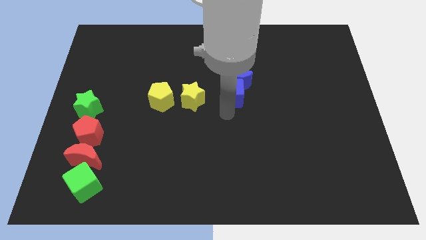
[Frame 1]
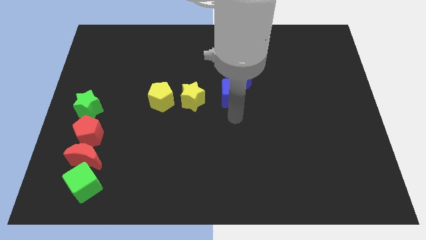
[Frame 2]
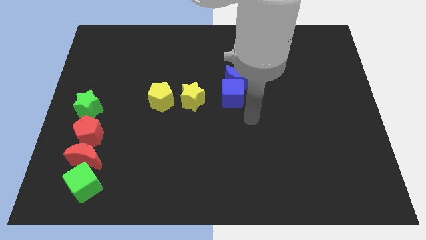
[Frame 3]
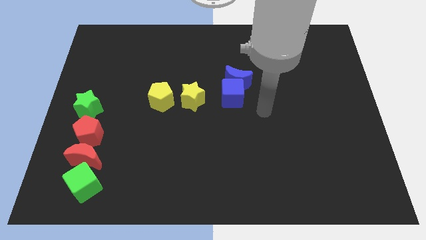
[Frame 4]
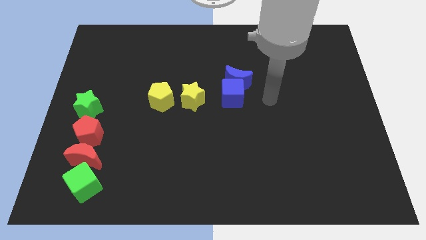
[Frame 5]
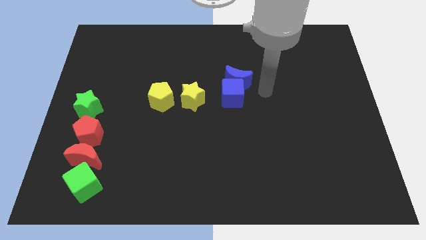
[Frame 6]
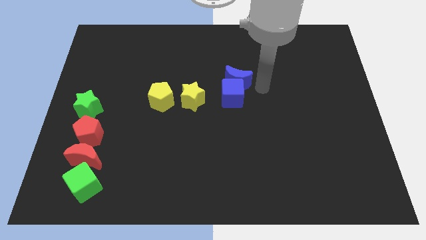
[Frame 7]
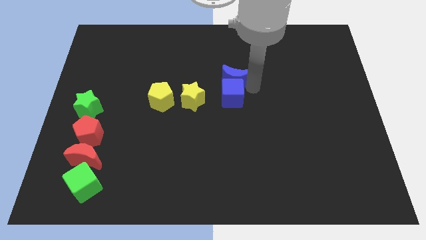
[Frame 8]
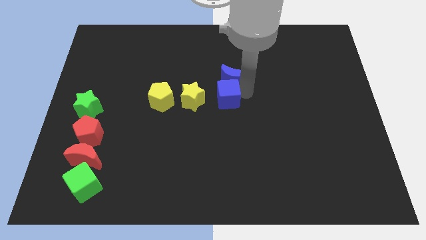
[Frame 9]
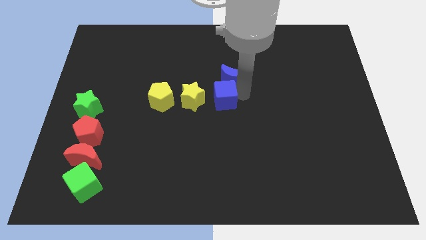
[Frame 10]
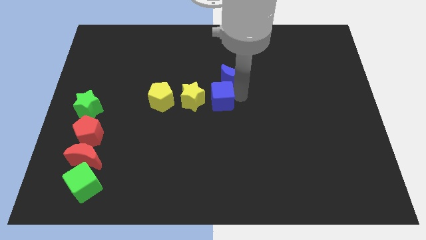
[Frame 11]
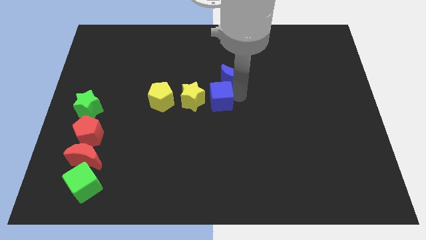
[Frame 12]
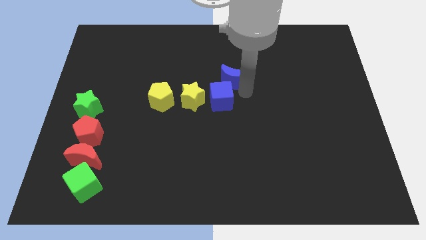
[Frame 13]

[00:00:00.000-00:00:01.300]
slide the blue cube slightly to the left

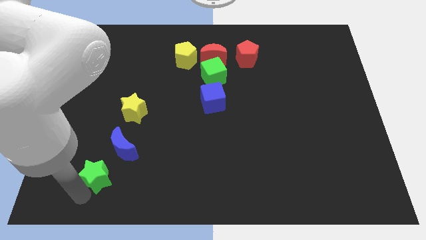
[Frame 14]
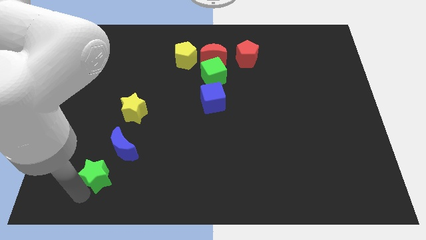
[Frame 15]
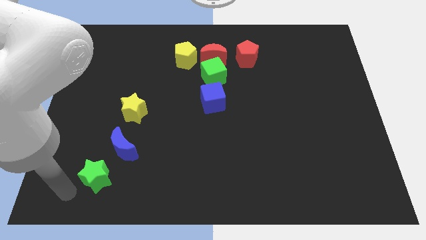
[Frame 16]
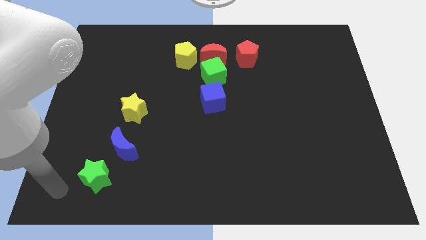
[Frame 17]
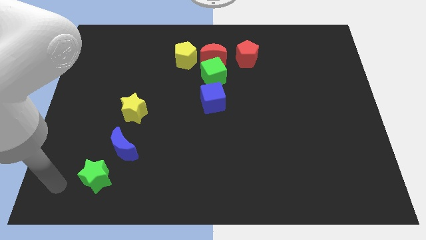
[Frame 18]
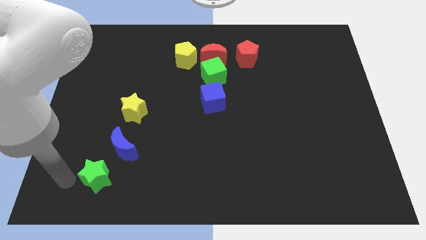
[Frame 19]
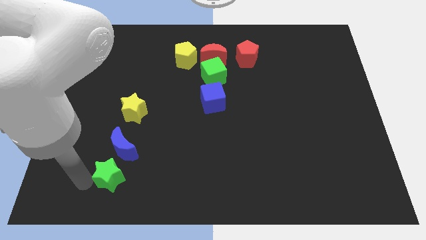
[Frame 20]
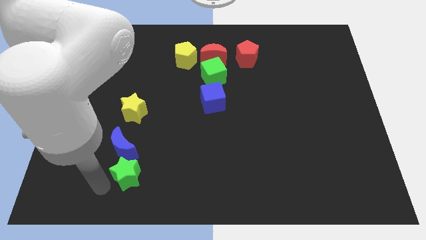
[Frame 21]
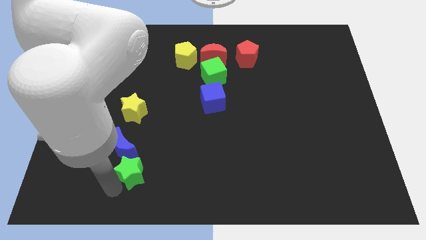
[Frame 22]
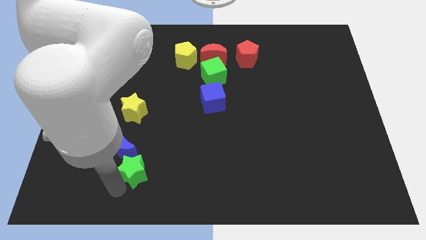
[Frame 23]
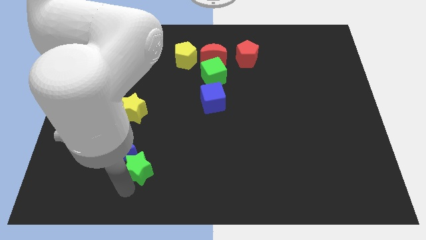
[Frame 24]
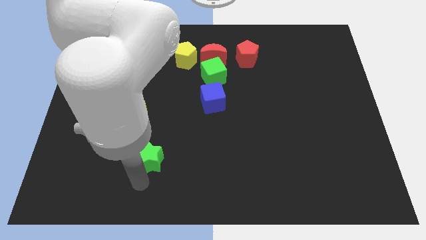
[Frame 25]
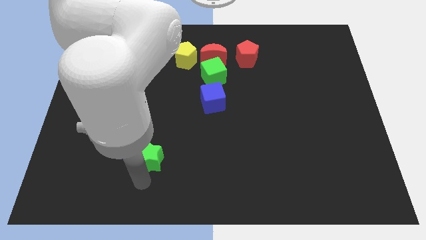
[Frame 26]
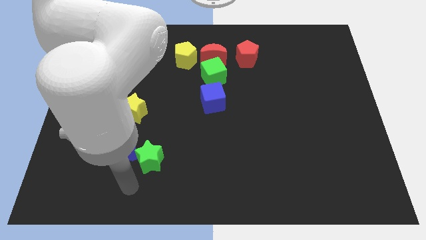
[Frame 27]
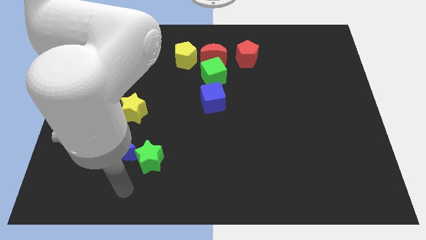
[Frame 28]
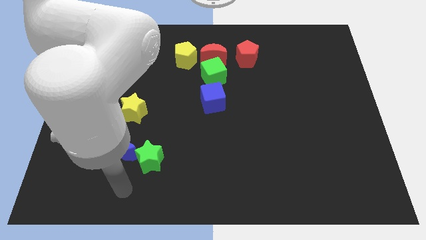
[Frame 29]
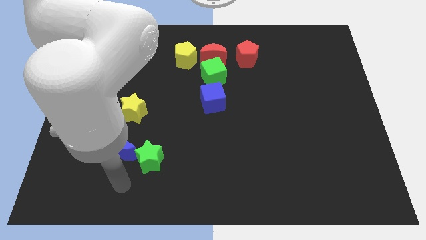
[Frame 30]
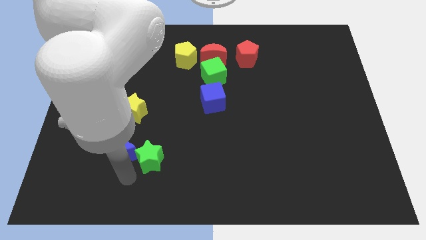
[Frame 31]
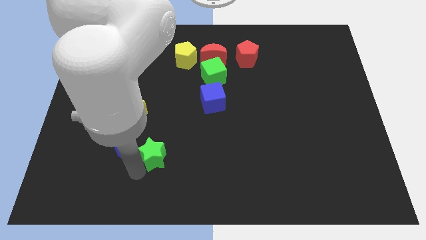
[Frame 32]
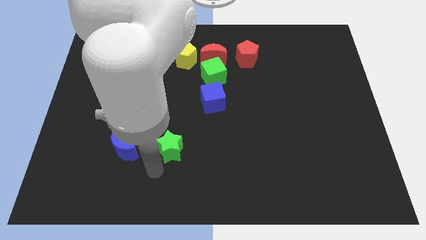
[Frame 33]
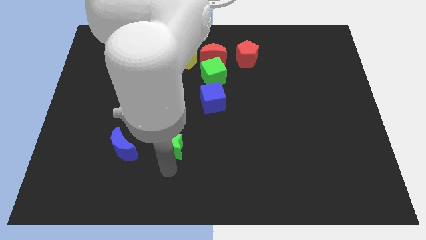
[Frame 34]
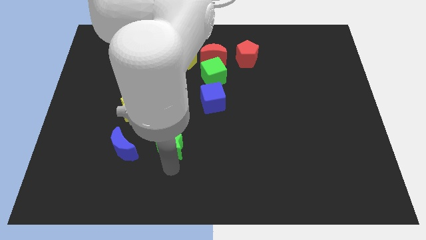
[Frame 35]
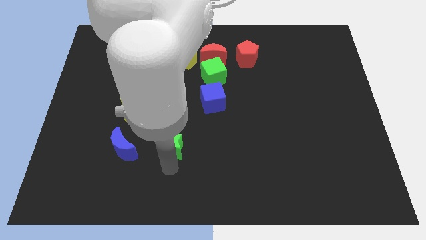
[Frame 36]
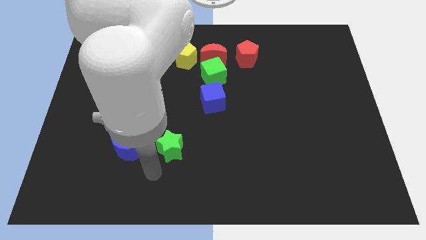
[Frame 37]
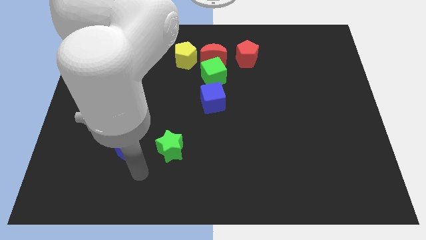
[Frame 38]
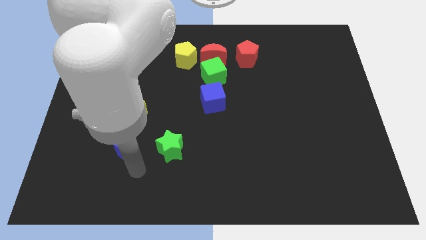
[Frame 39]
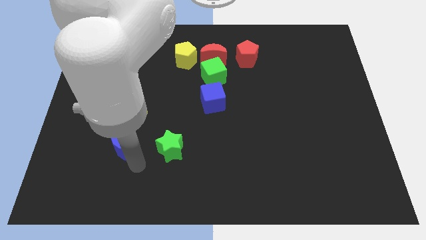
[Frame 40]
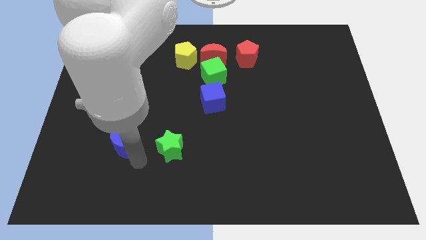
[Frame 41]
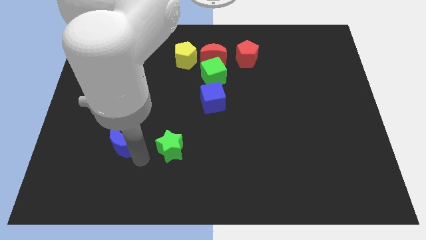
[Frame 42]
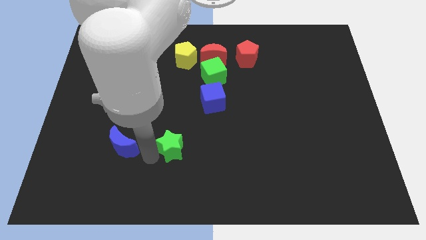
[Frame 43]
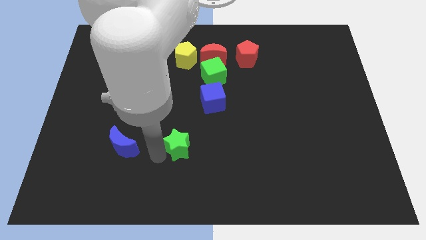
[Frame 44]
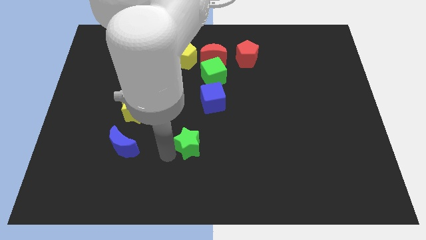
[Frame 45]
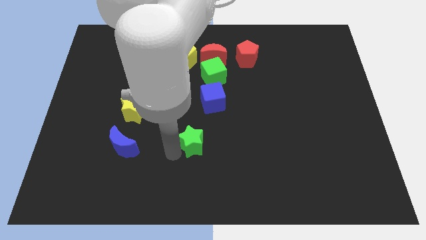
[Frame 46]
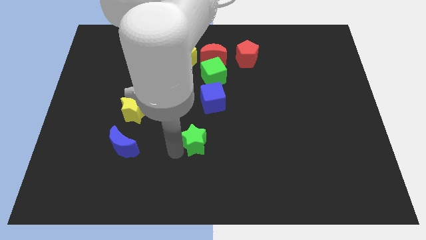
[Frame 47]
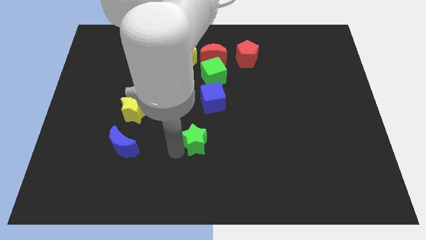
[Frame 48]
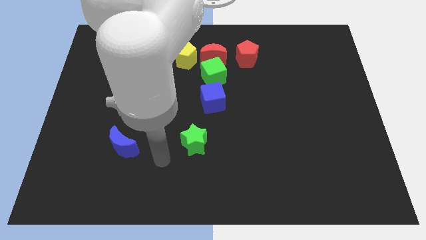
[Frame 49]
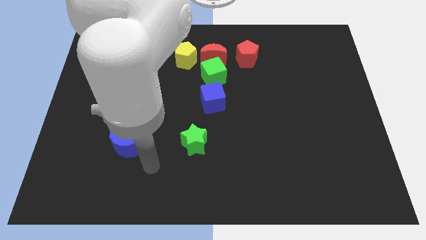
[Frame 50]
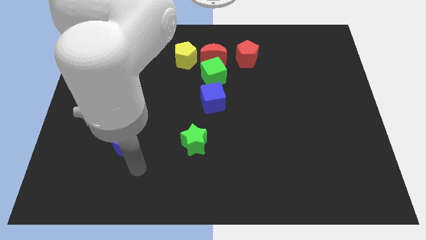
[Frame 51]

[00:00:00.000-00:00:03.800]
push the green star towards the right side of the blue crescent

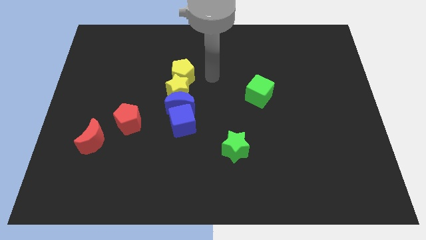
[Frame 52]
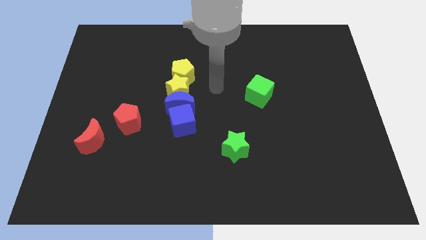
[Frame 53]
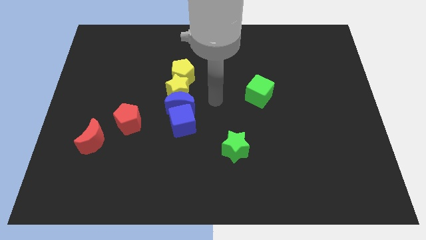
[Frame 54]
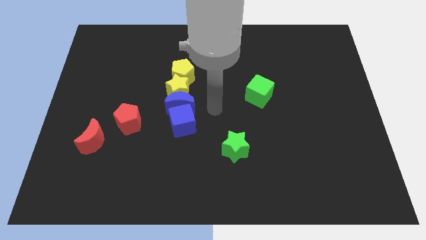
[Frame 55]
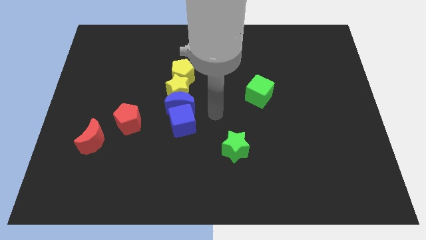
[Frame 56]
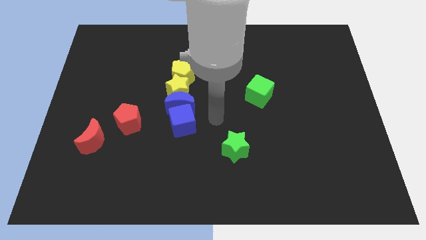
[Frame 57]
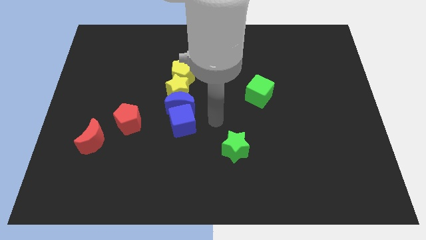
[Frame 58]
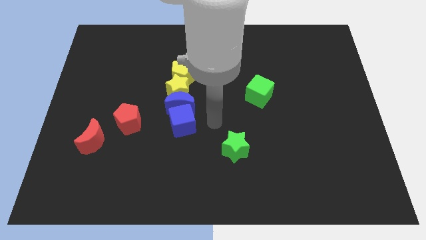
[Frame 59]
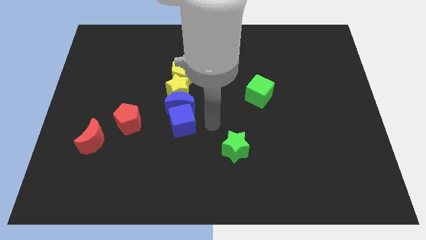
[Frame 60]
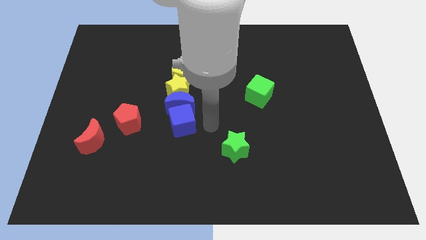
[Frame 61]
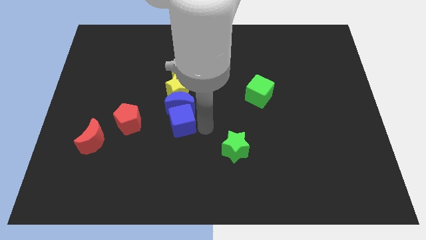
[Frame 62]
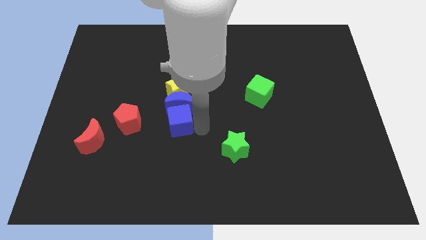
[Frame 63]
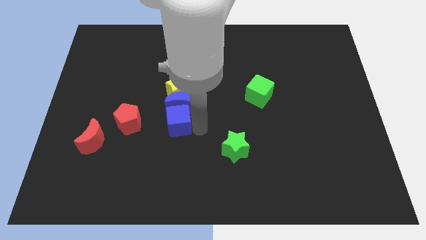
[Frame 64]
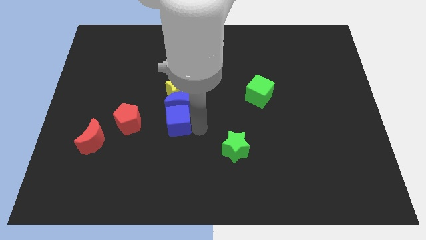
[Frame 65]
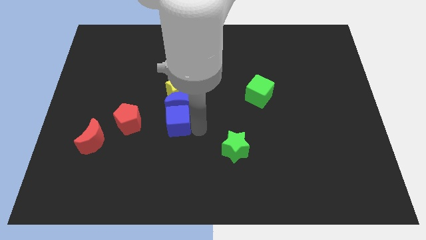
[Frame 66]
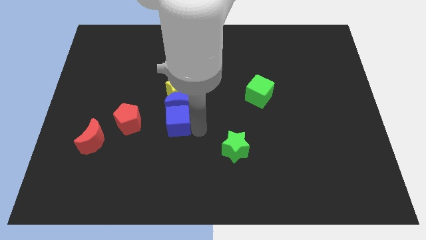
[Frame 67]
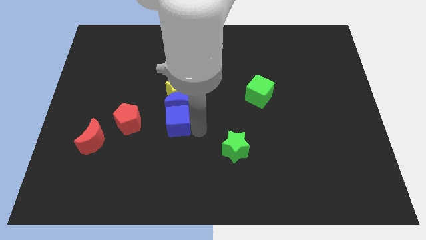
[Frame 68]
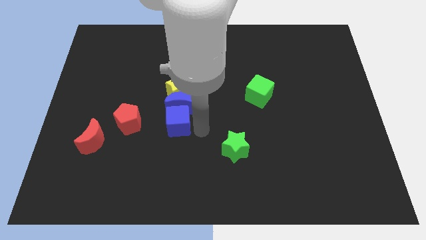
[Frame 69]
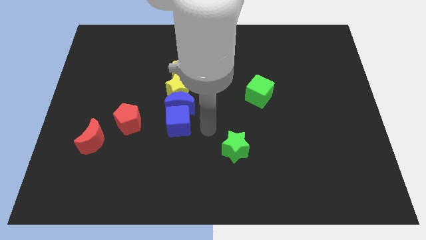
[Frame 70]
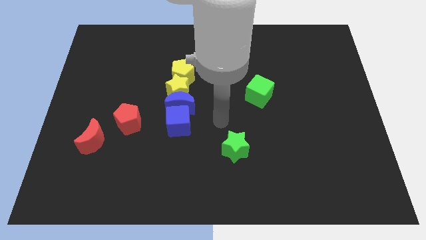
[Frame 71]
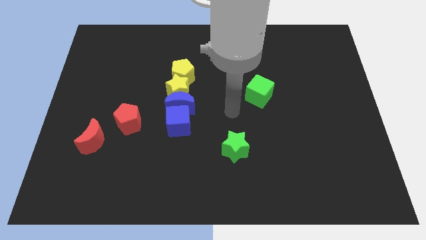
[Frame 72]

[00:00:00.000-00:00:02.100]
drag blue cube towards left

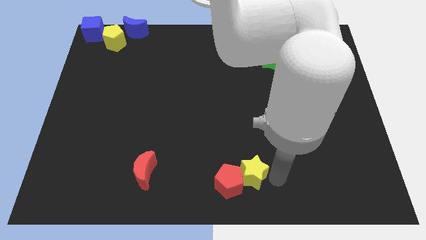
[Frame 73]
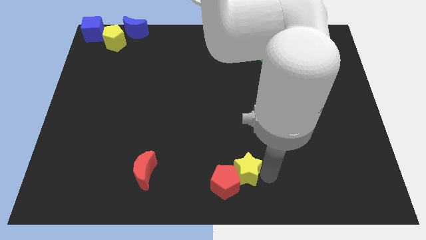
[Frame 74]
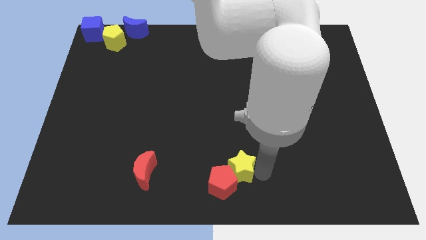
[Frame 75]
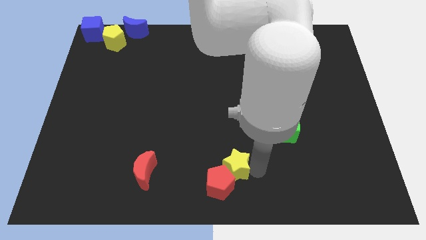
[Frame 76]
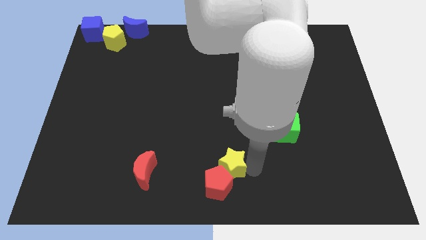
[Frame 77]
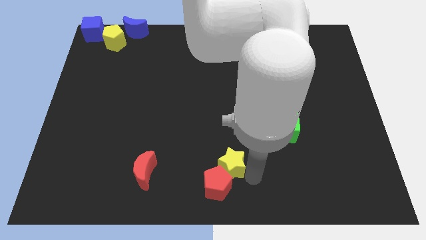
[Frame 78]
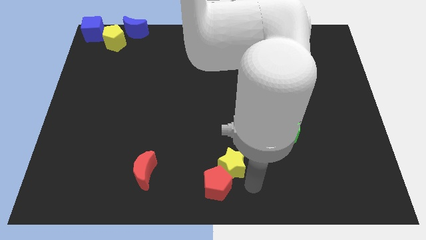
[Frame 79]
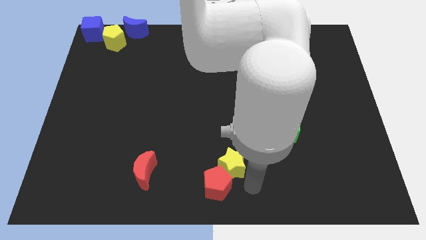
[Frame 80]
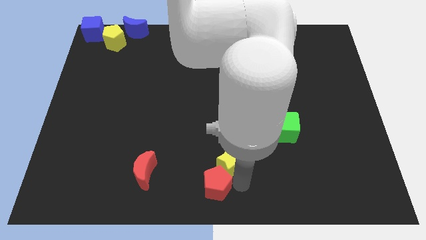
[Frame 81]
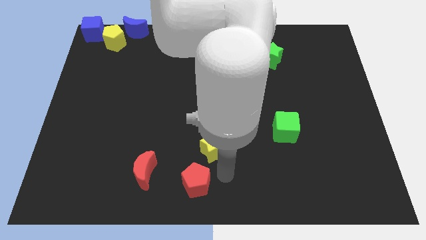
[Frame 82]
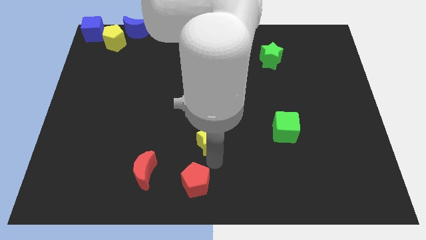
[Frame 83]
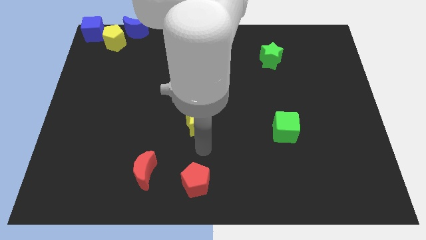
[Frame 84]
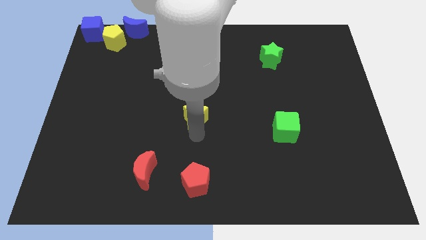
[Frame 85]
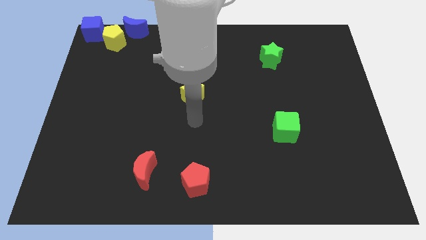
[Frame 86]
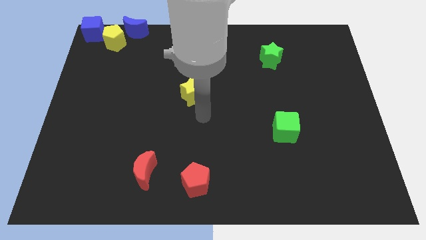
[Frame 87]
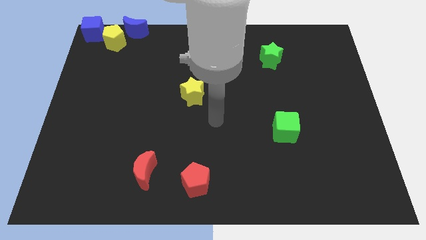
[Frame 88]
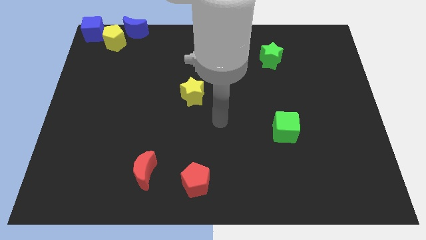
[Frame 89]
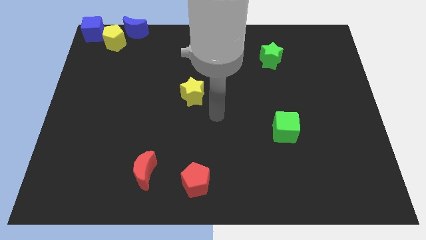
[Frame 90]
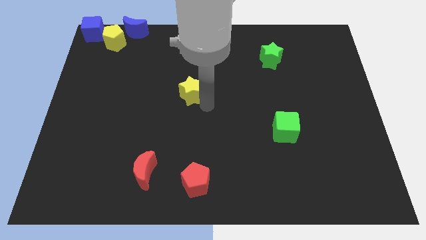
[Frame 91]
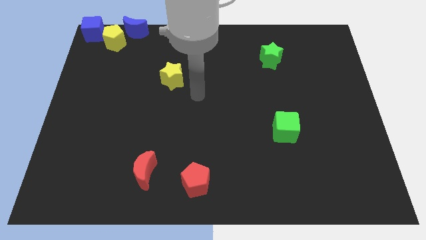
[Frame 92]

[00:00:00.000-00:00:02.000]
separate the yellow star from the red pentagon
